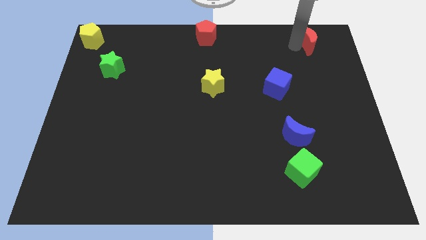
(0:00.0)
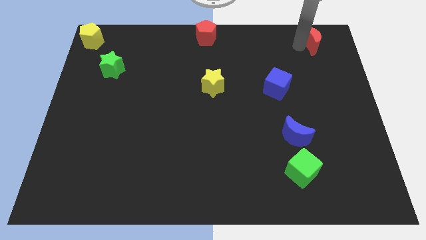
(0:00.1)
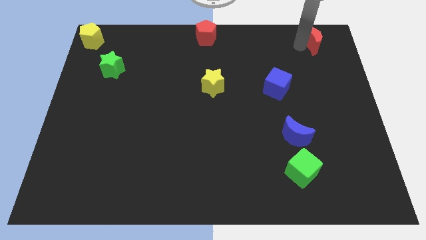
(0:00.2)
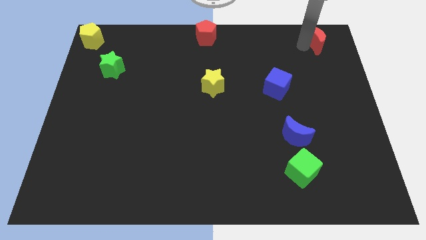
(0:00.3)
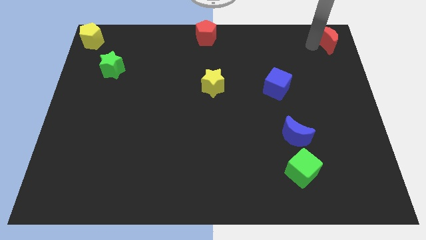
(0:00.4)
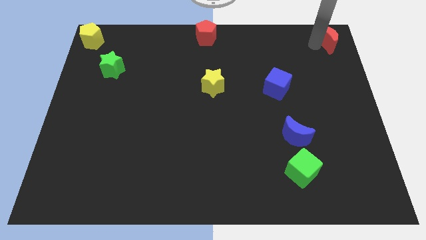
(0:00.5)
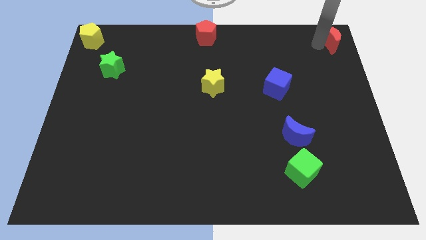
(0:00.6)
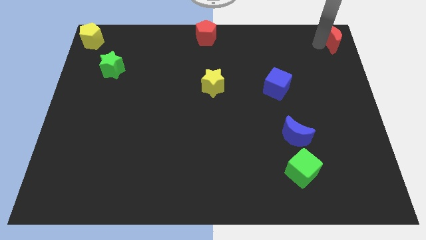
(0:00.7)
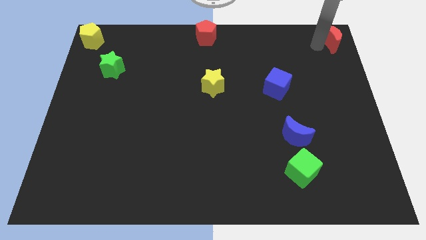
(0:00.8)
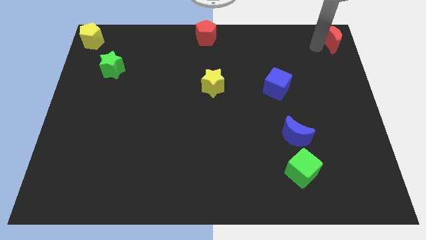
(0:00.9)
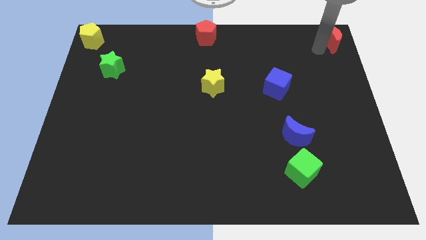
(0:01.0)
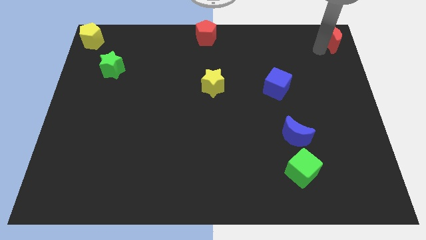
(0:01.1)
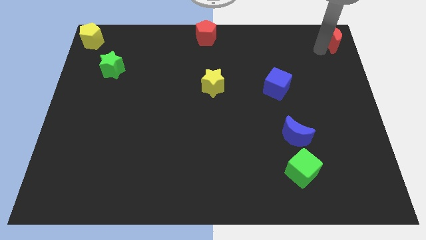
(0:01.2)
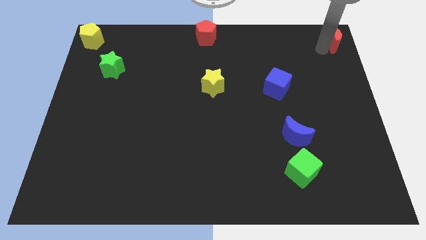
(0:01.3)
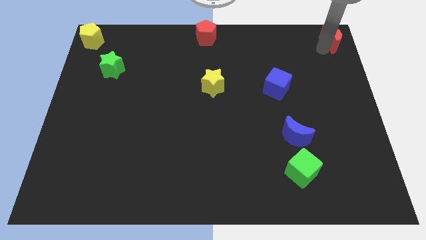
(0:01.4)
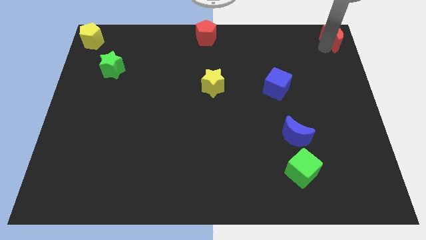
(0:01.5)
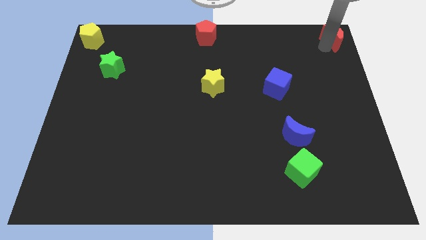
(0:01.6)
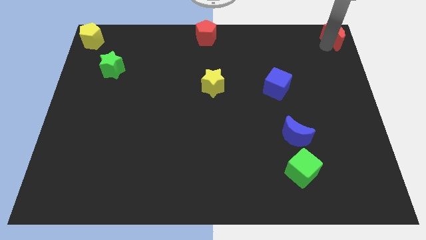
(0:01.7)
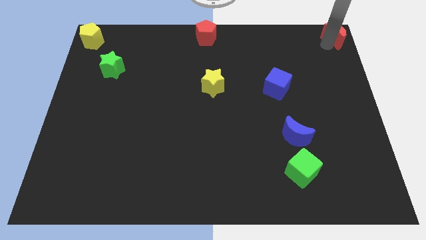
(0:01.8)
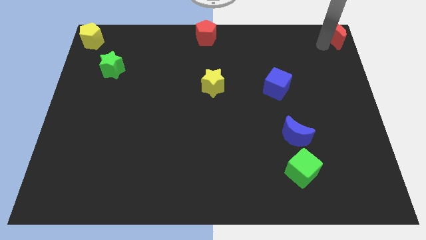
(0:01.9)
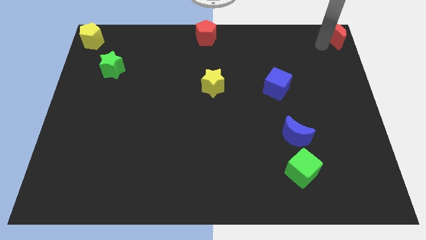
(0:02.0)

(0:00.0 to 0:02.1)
place the red crescent to the top right corner of the board

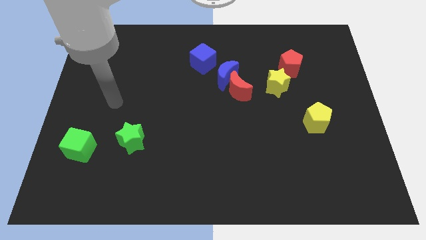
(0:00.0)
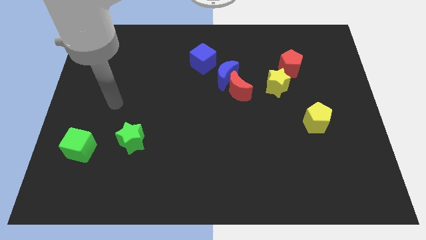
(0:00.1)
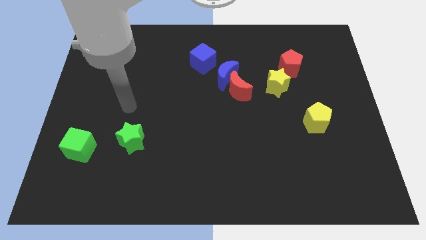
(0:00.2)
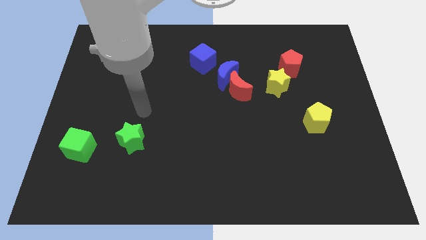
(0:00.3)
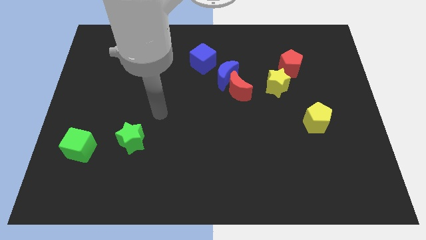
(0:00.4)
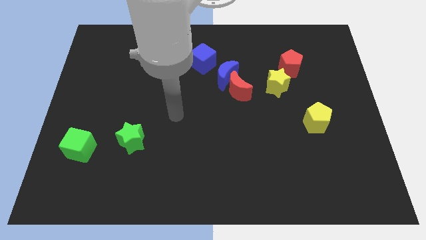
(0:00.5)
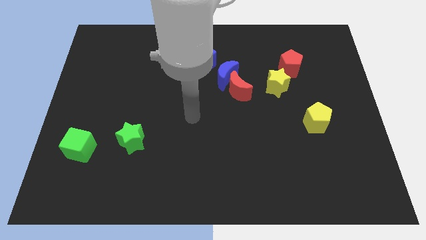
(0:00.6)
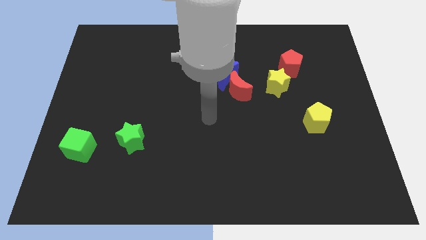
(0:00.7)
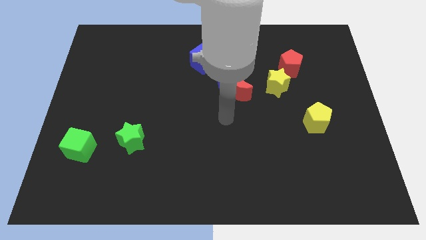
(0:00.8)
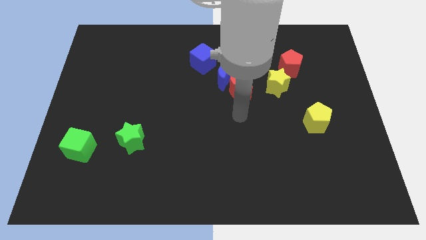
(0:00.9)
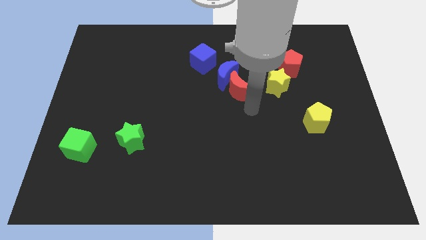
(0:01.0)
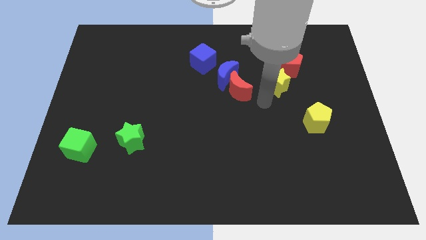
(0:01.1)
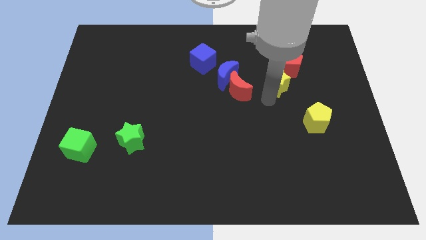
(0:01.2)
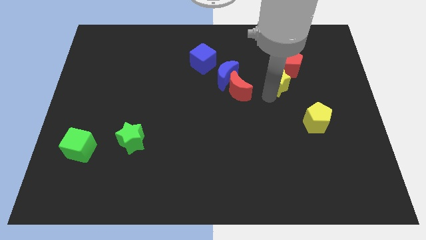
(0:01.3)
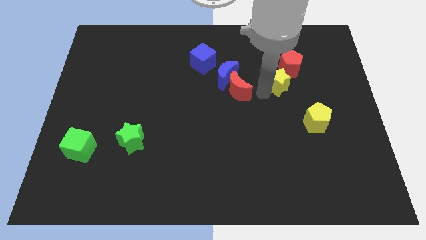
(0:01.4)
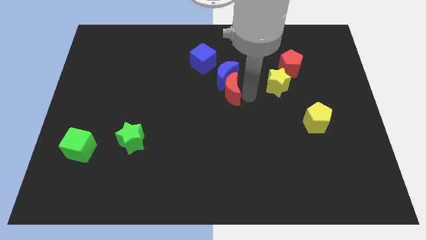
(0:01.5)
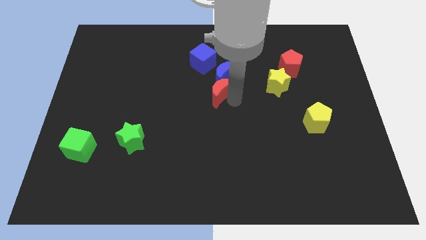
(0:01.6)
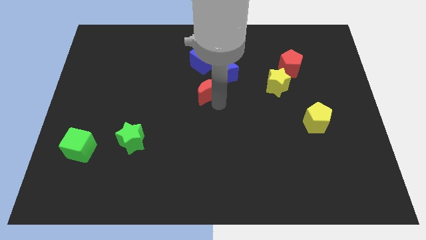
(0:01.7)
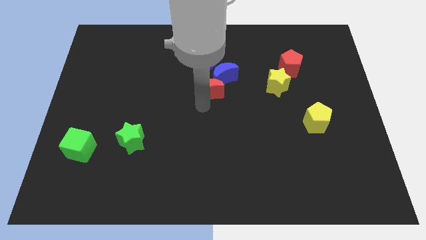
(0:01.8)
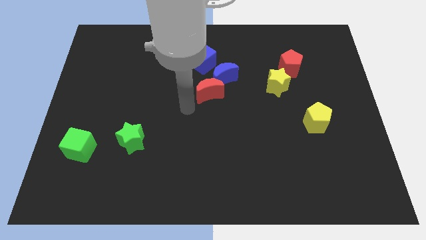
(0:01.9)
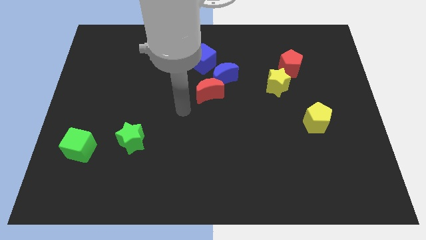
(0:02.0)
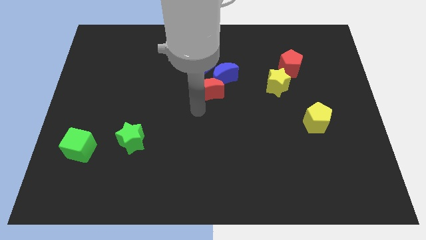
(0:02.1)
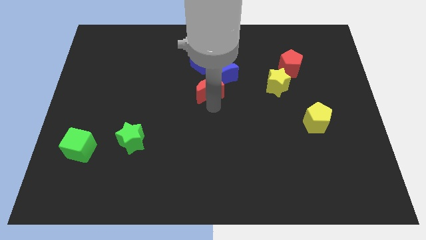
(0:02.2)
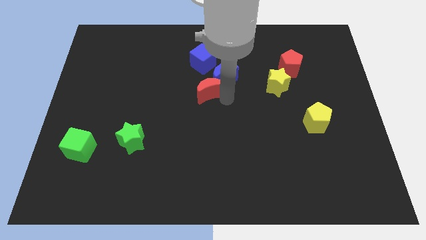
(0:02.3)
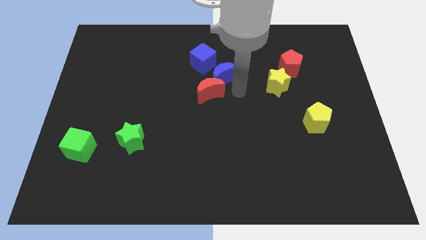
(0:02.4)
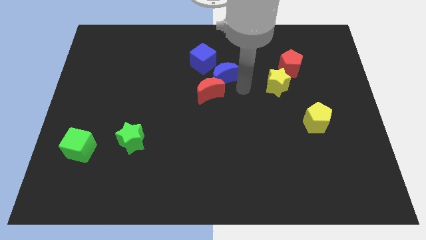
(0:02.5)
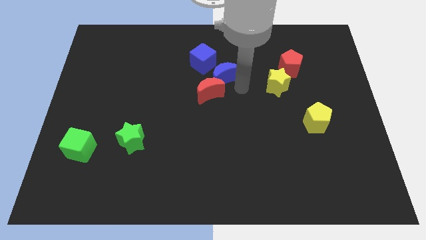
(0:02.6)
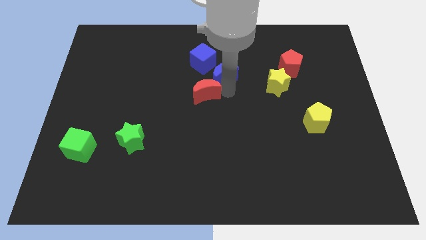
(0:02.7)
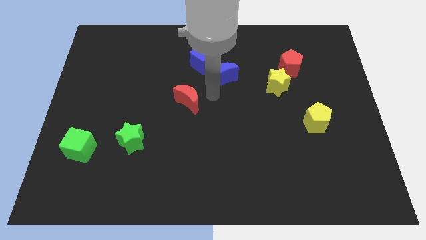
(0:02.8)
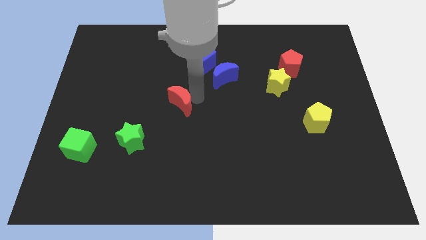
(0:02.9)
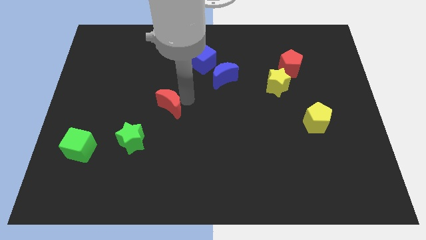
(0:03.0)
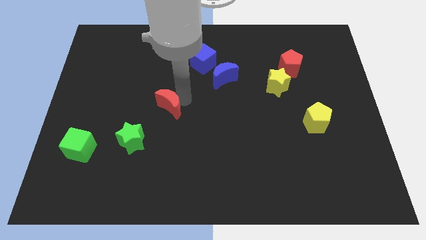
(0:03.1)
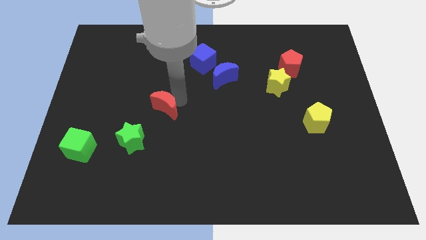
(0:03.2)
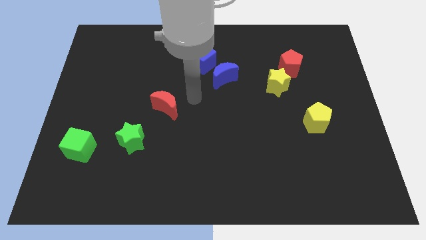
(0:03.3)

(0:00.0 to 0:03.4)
move the red crescent diagonal top right to the green star

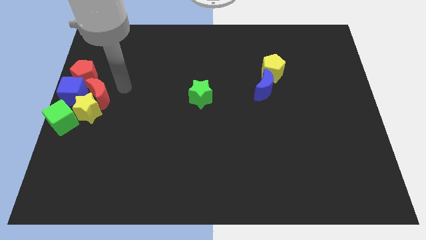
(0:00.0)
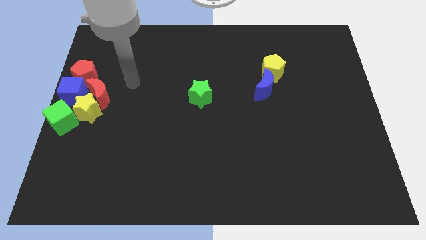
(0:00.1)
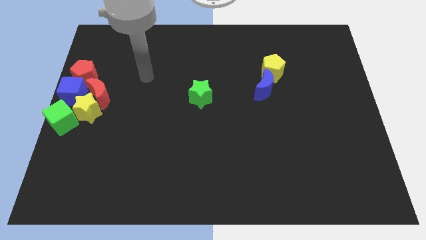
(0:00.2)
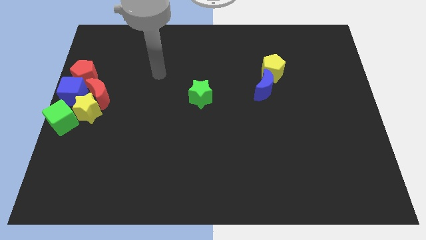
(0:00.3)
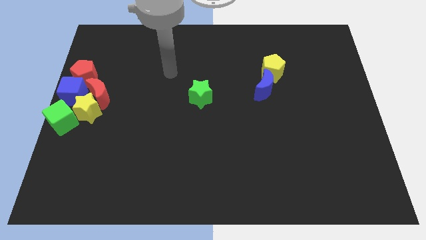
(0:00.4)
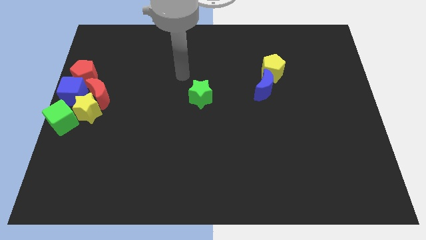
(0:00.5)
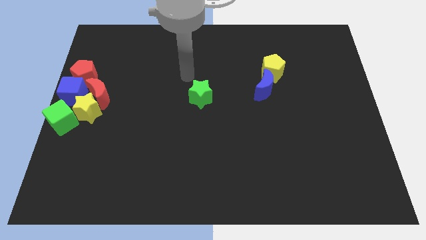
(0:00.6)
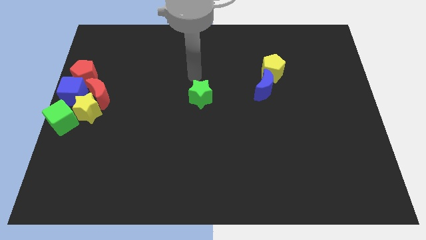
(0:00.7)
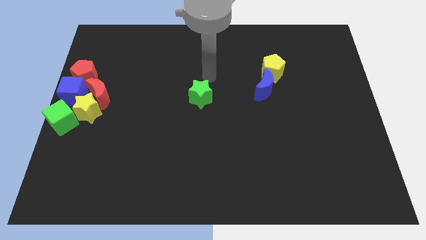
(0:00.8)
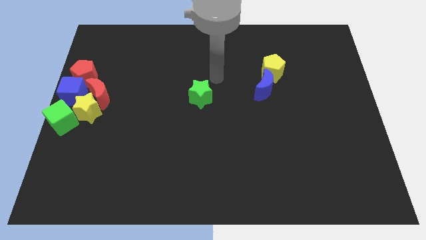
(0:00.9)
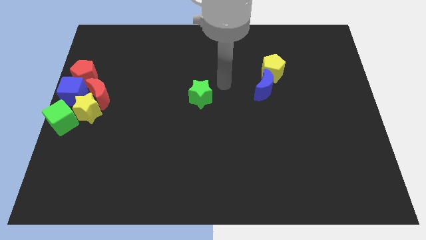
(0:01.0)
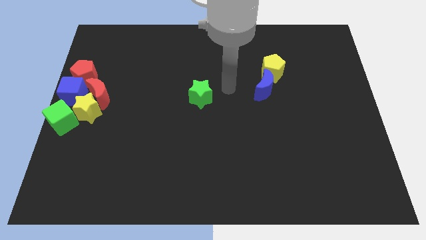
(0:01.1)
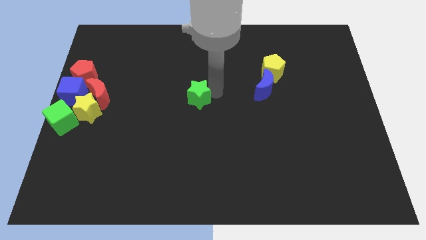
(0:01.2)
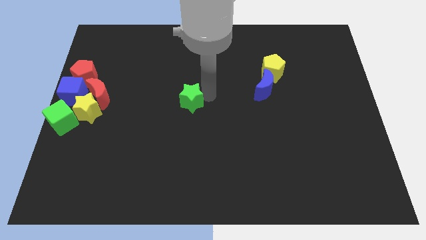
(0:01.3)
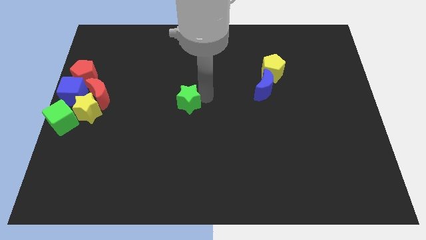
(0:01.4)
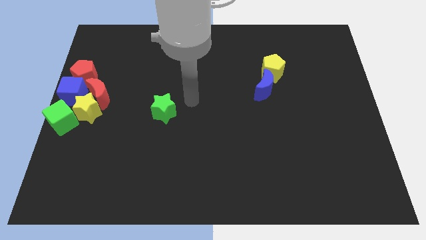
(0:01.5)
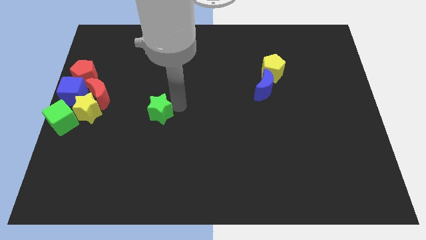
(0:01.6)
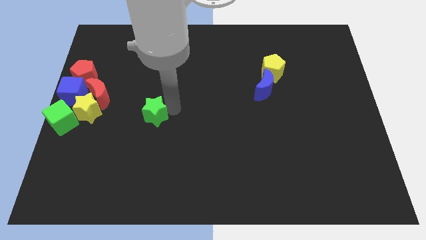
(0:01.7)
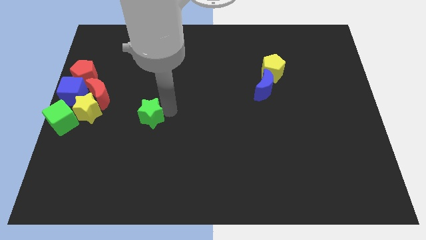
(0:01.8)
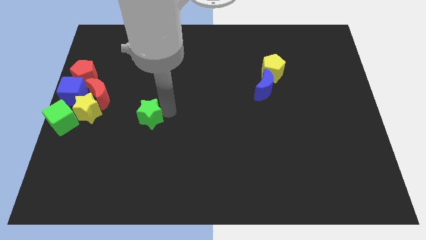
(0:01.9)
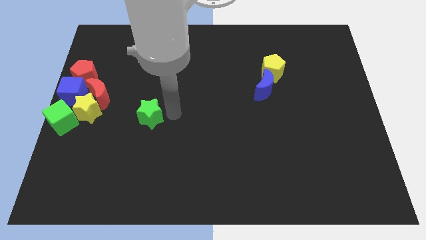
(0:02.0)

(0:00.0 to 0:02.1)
move the green star horizontally right to the yellow star

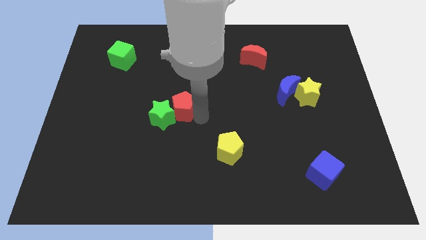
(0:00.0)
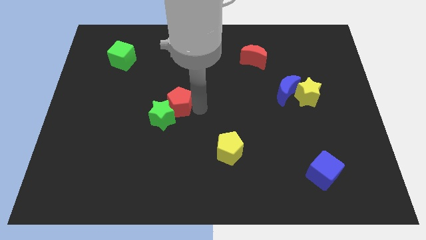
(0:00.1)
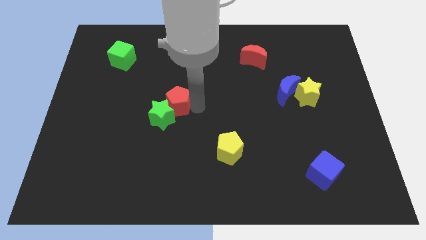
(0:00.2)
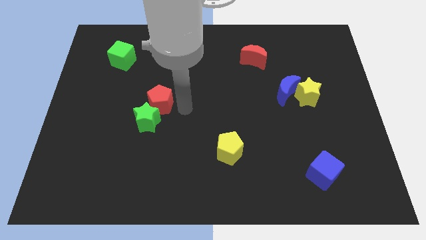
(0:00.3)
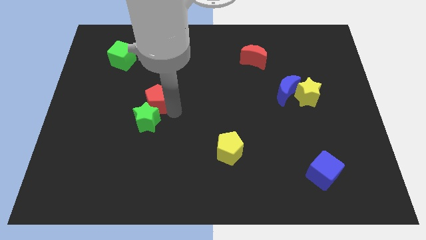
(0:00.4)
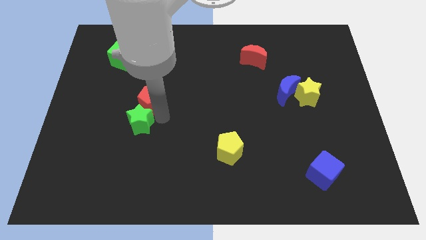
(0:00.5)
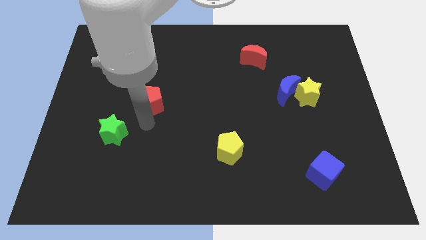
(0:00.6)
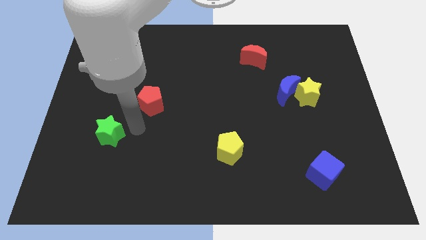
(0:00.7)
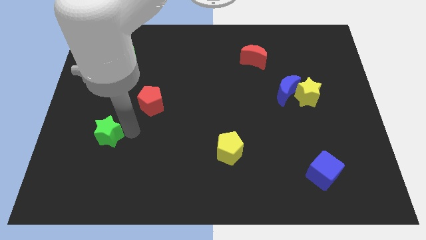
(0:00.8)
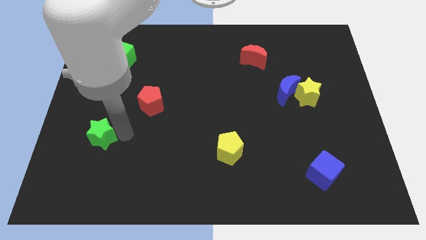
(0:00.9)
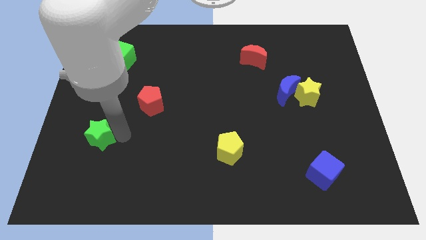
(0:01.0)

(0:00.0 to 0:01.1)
separate the green star from red pentagon

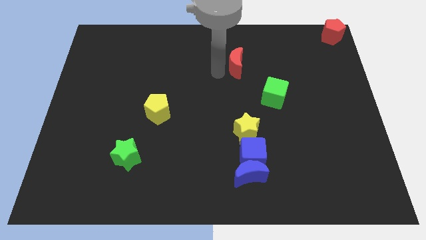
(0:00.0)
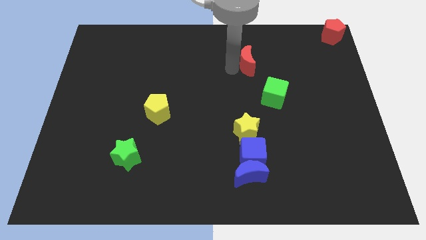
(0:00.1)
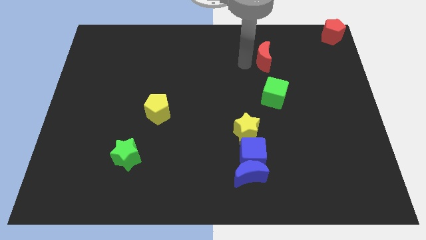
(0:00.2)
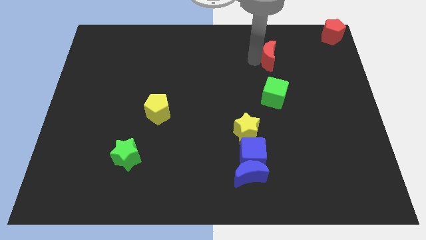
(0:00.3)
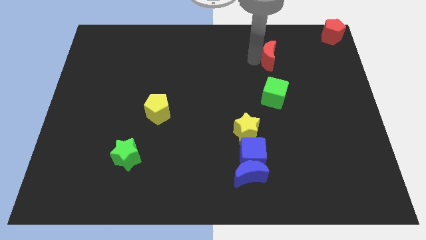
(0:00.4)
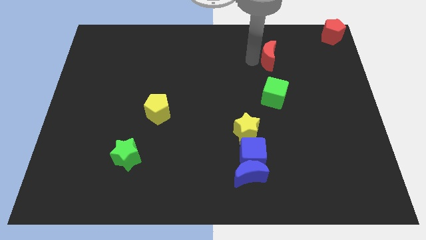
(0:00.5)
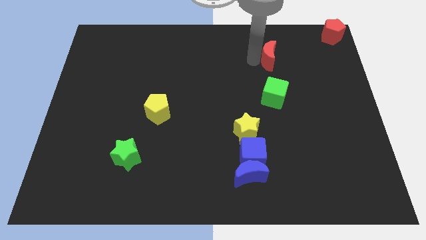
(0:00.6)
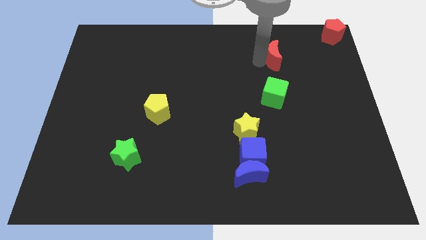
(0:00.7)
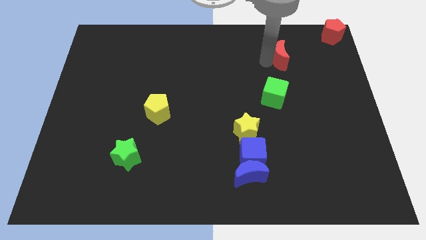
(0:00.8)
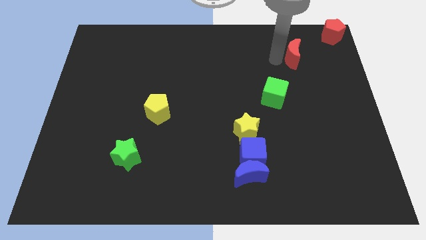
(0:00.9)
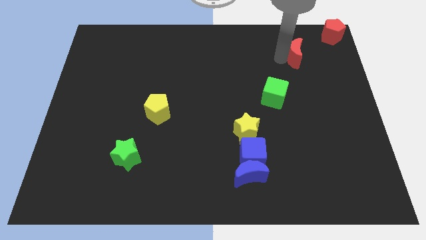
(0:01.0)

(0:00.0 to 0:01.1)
push the red crescent to the right of the board
